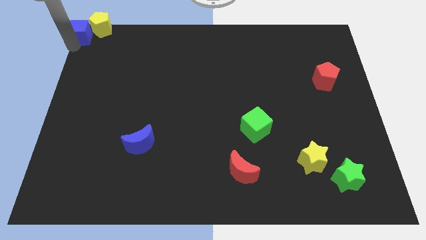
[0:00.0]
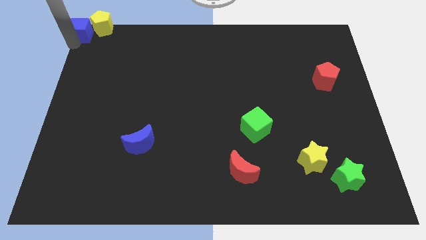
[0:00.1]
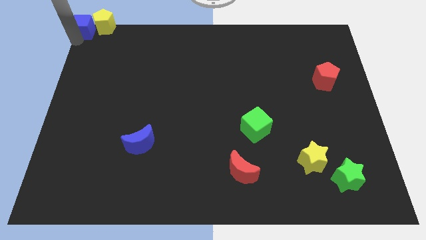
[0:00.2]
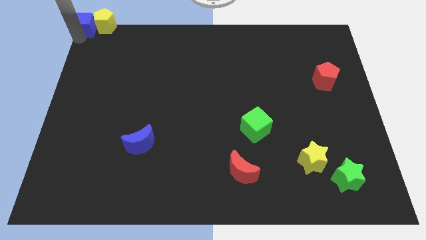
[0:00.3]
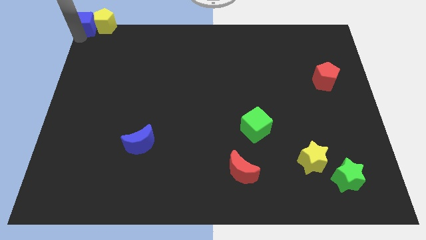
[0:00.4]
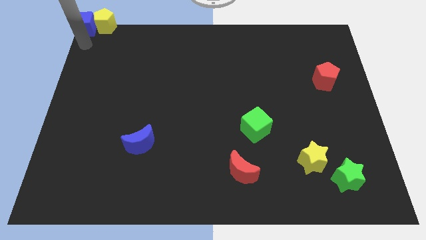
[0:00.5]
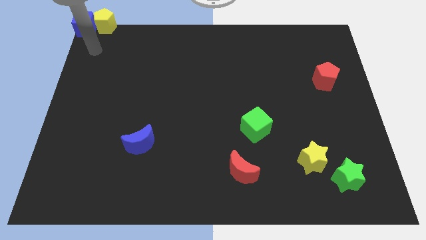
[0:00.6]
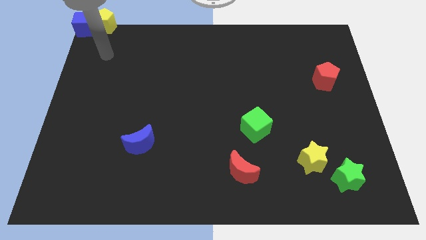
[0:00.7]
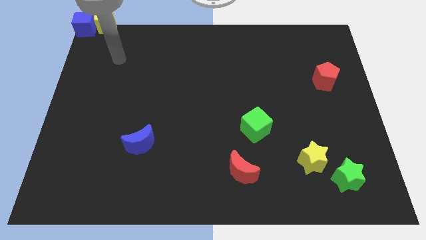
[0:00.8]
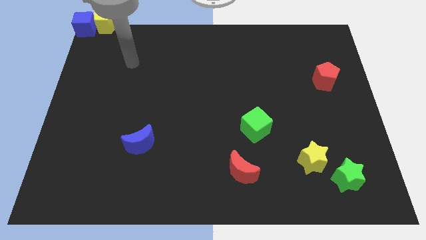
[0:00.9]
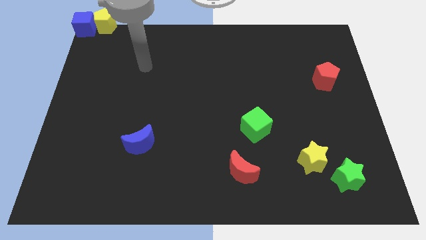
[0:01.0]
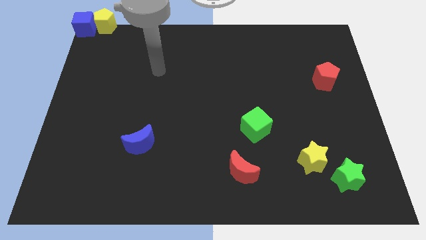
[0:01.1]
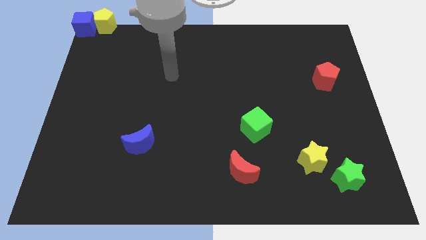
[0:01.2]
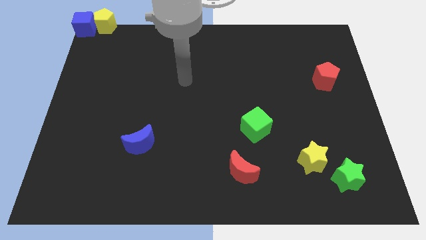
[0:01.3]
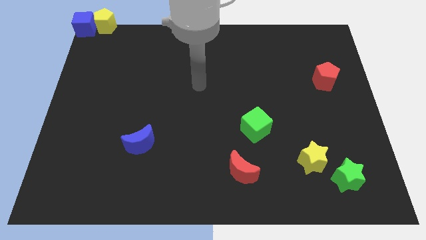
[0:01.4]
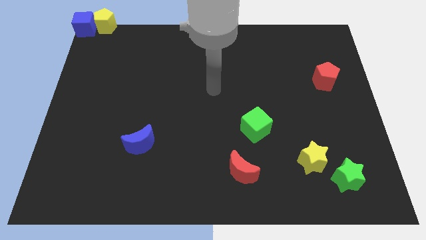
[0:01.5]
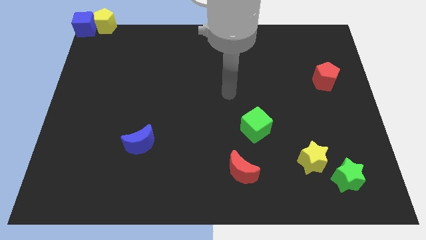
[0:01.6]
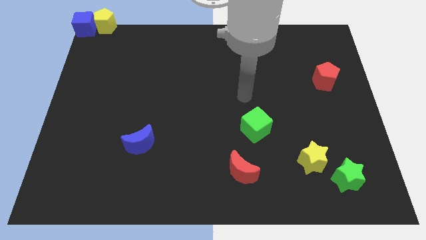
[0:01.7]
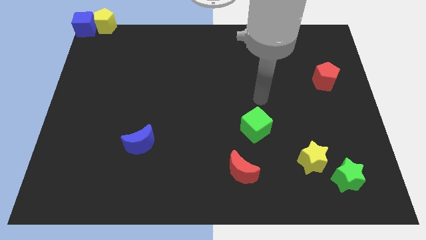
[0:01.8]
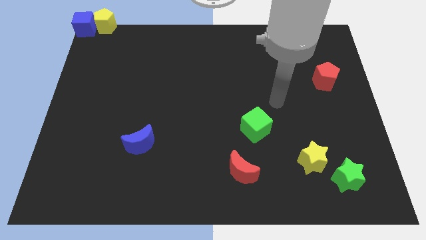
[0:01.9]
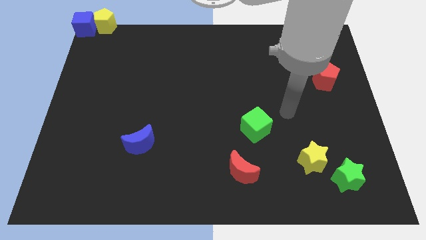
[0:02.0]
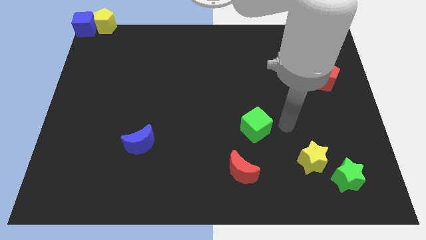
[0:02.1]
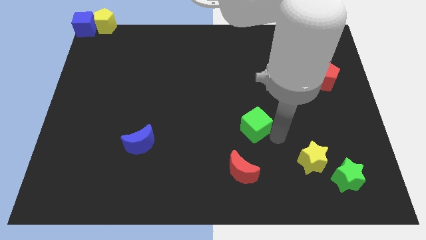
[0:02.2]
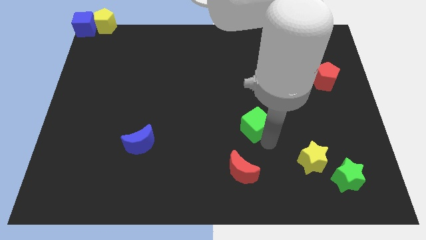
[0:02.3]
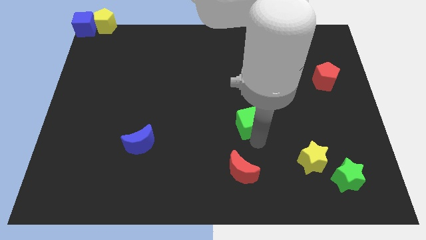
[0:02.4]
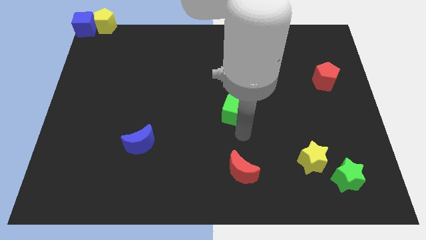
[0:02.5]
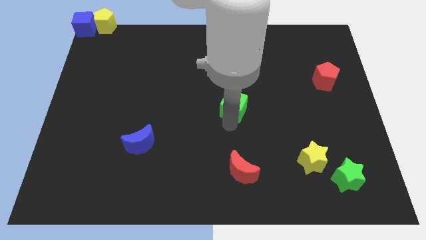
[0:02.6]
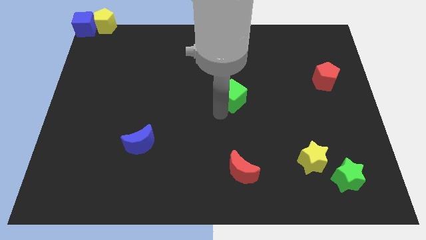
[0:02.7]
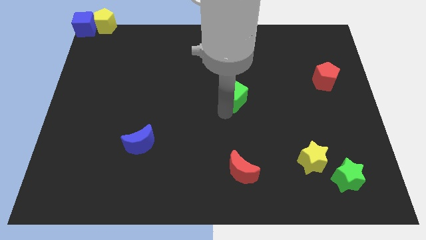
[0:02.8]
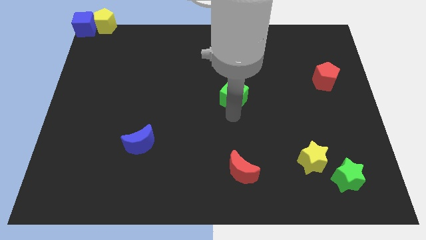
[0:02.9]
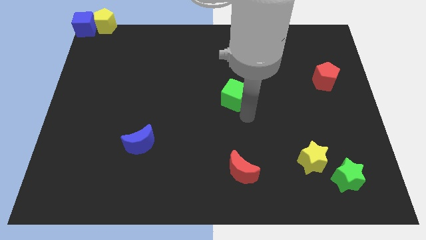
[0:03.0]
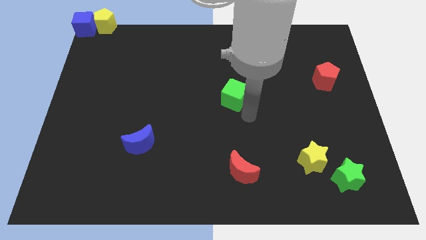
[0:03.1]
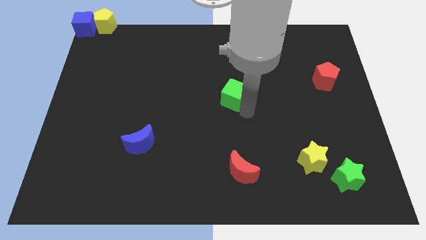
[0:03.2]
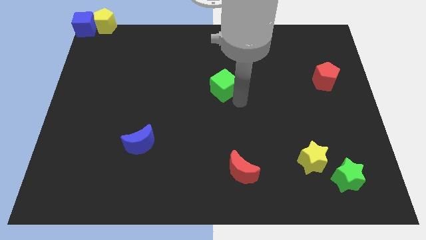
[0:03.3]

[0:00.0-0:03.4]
slightly move the green cube to the center of the board

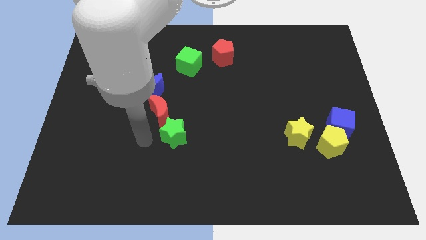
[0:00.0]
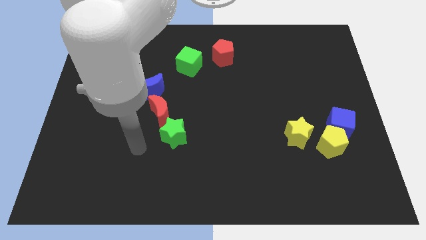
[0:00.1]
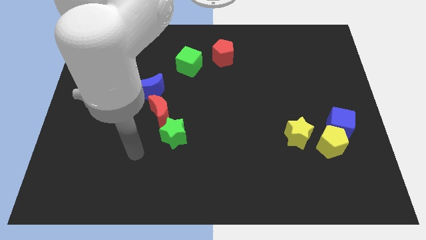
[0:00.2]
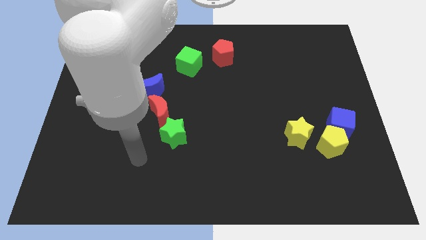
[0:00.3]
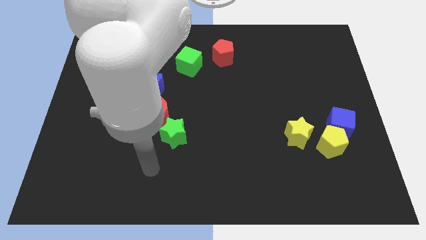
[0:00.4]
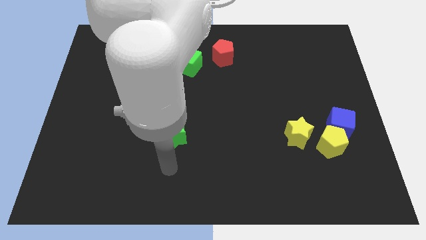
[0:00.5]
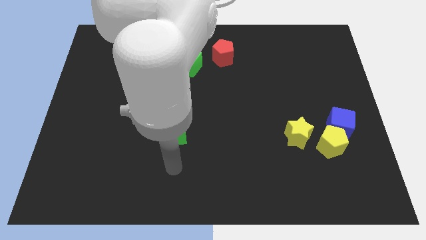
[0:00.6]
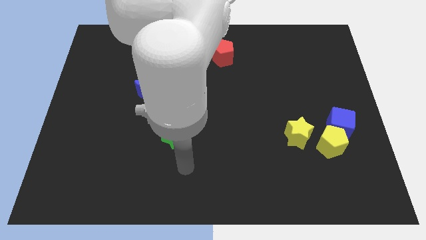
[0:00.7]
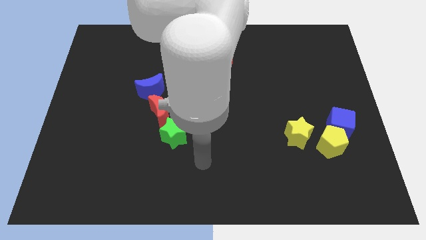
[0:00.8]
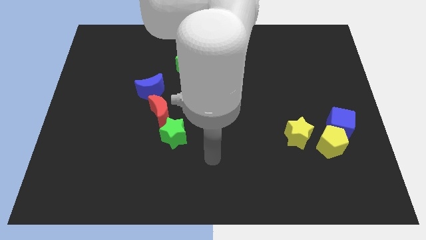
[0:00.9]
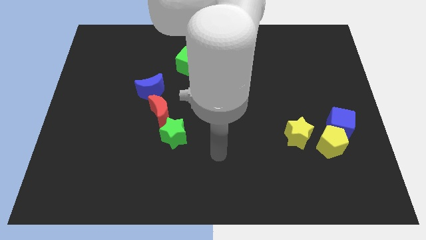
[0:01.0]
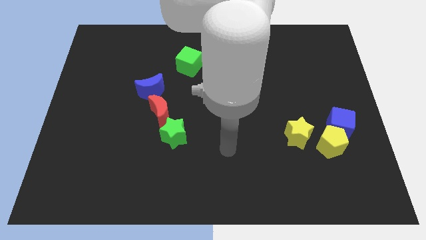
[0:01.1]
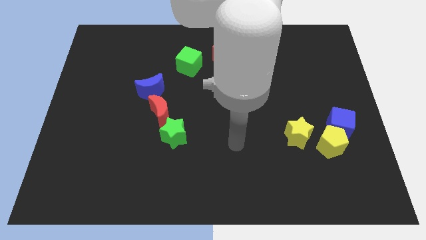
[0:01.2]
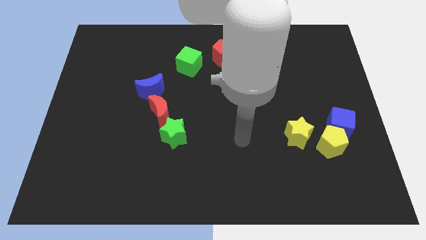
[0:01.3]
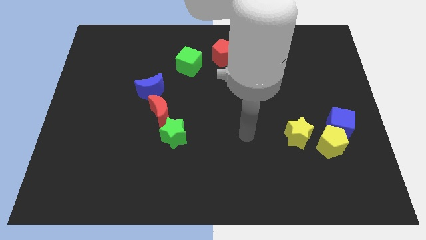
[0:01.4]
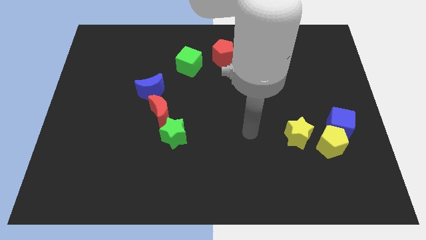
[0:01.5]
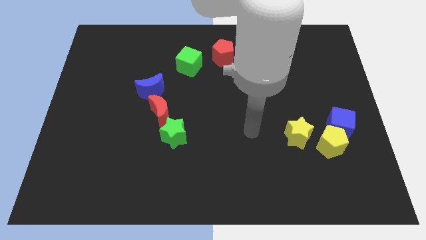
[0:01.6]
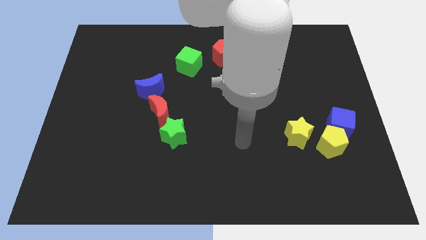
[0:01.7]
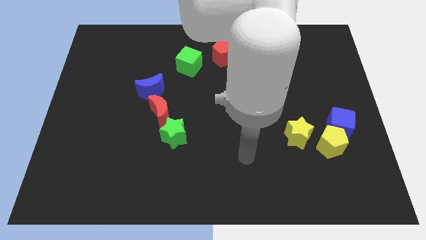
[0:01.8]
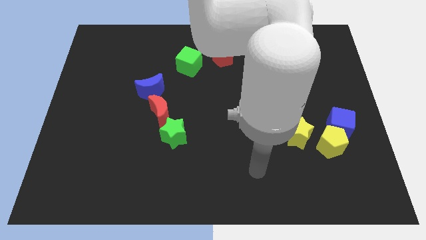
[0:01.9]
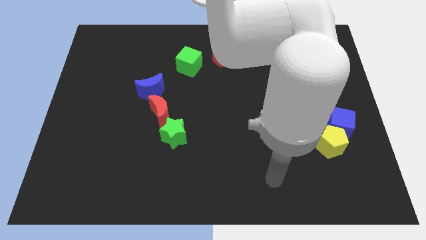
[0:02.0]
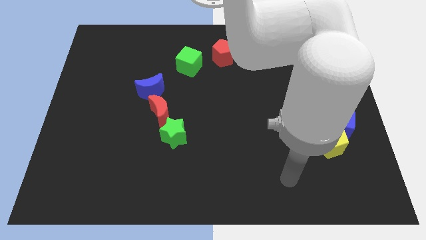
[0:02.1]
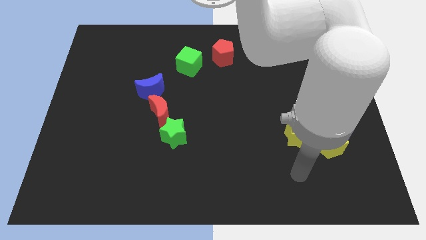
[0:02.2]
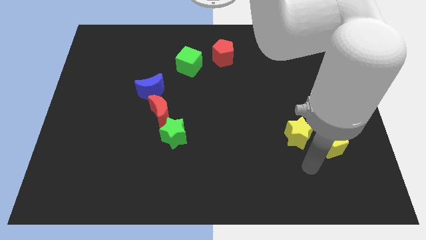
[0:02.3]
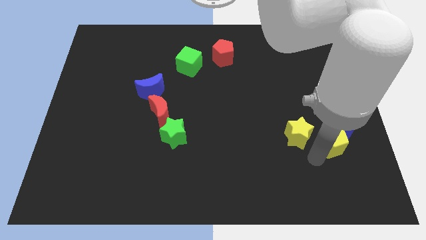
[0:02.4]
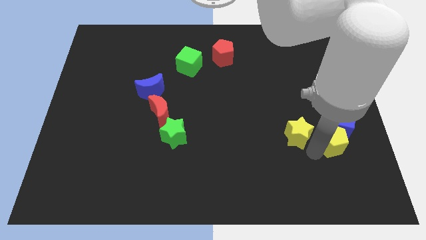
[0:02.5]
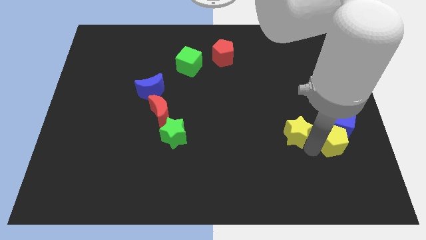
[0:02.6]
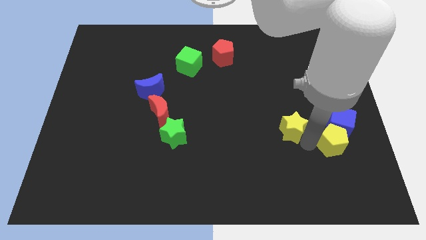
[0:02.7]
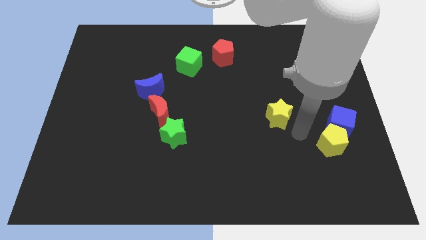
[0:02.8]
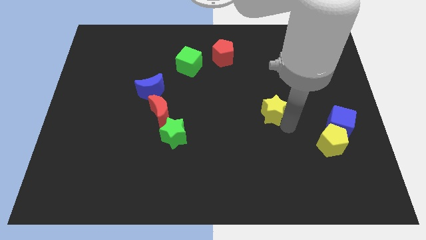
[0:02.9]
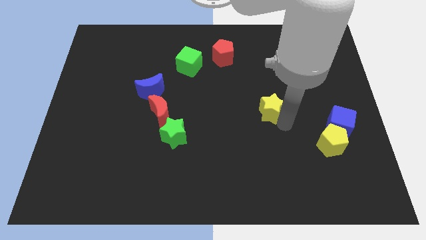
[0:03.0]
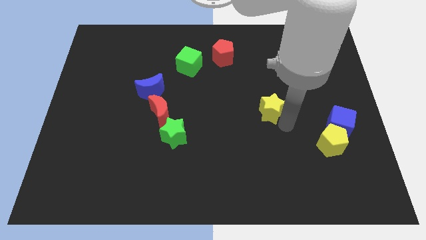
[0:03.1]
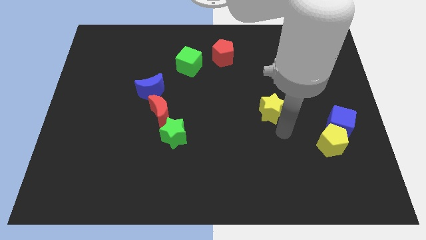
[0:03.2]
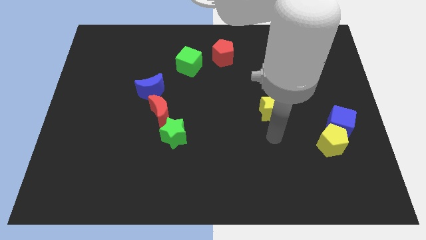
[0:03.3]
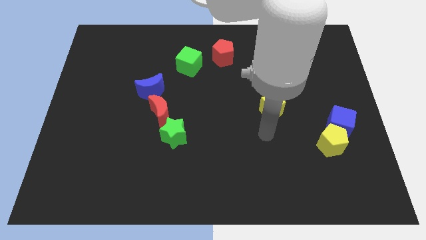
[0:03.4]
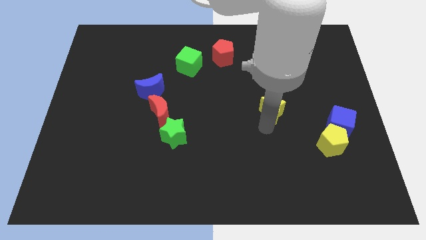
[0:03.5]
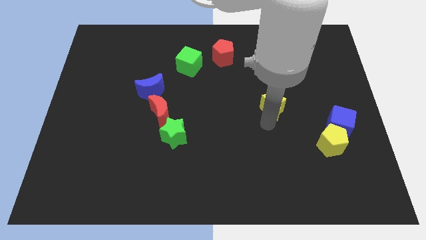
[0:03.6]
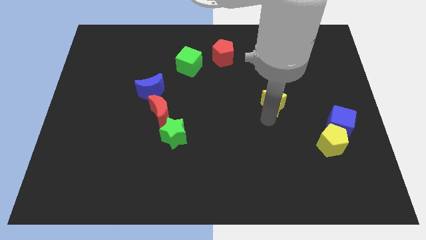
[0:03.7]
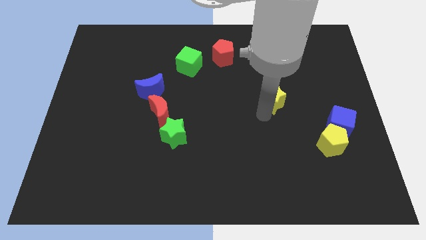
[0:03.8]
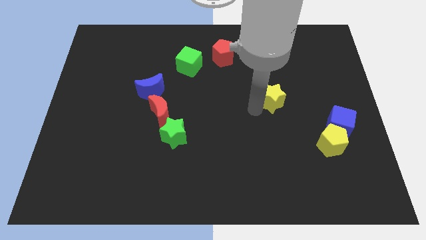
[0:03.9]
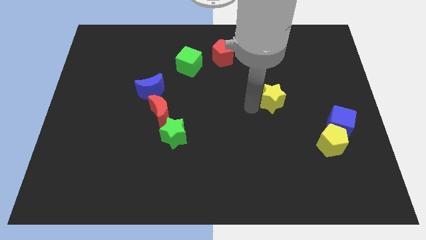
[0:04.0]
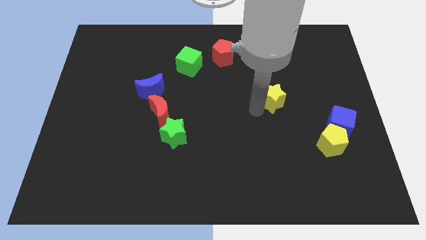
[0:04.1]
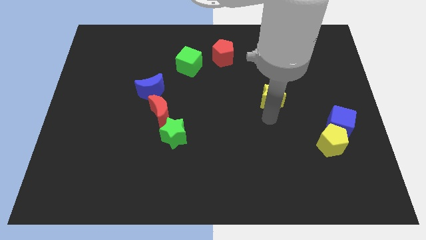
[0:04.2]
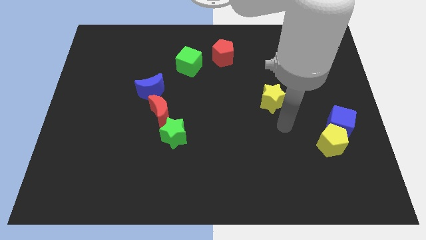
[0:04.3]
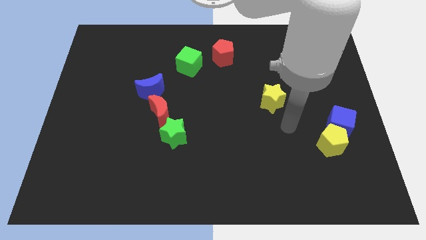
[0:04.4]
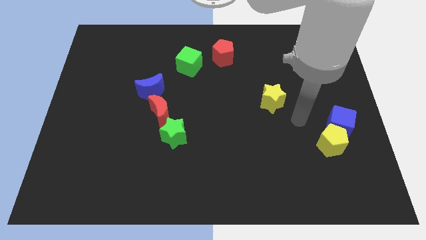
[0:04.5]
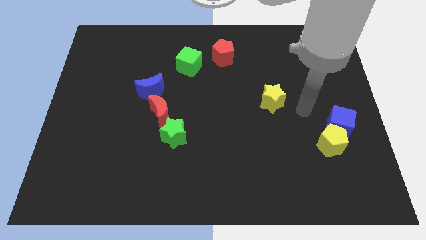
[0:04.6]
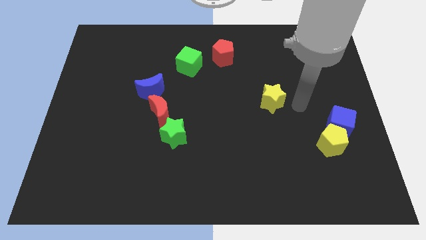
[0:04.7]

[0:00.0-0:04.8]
place the yellow star between the red and yellow pentagon

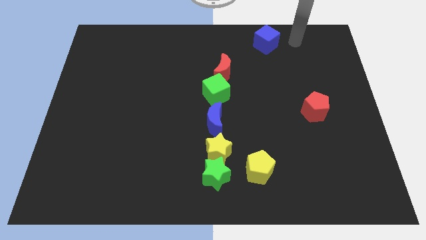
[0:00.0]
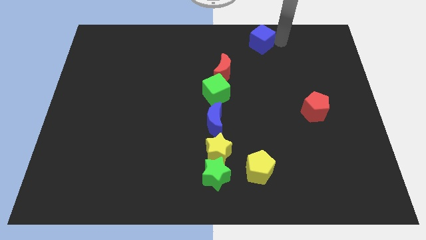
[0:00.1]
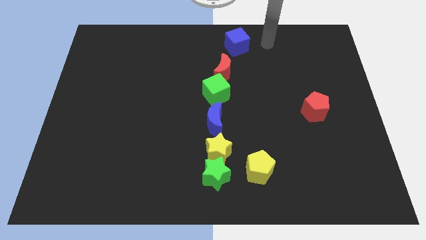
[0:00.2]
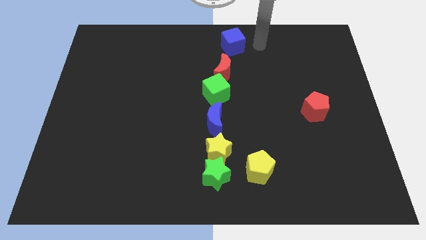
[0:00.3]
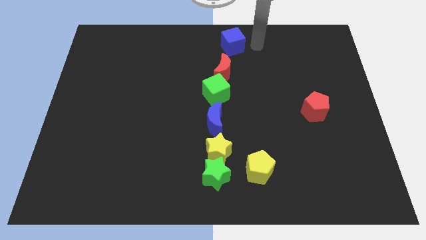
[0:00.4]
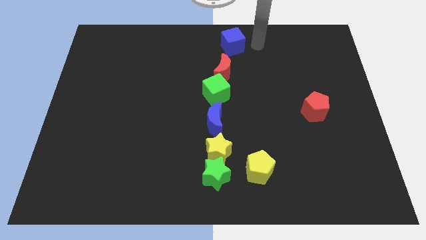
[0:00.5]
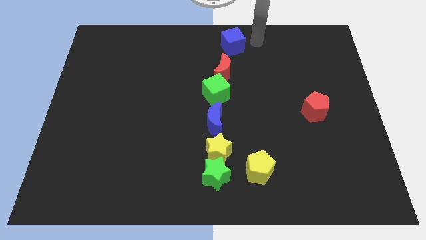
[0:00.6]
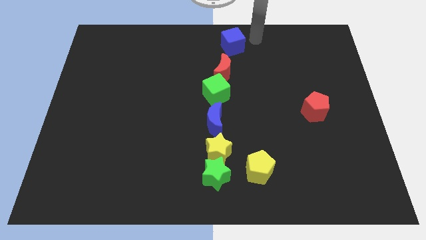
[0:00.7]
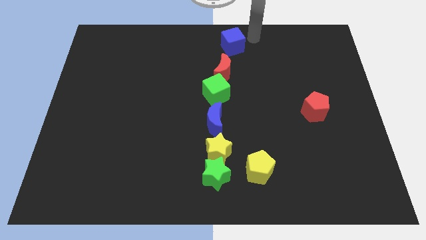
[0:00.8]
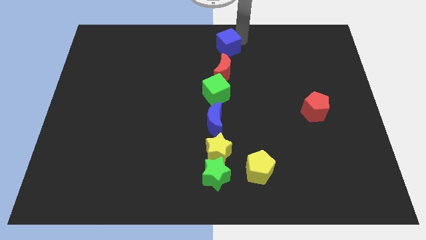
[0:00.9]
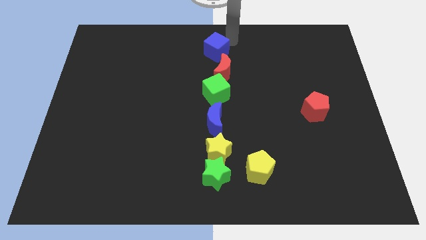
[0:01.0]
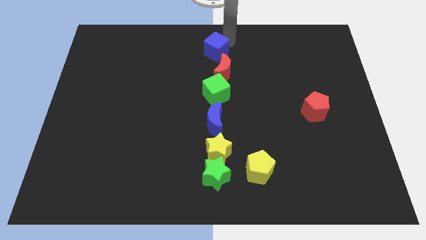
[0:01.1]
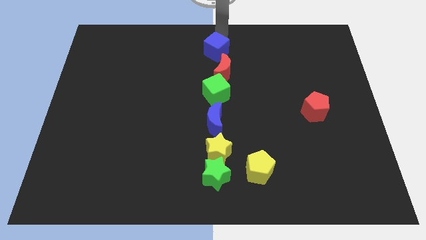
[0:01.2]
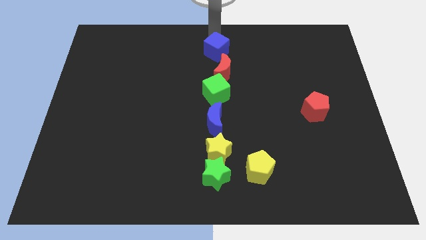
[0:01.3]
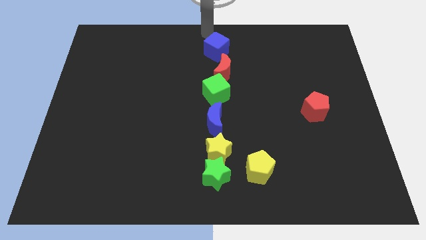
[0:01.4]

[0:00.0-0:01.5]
place the blue cube on top of the red crescent
